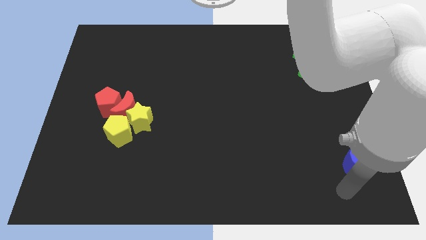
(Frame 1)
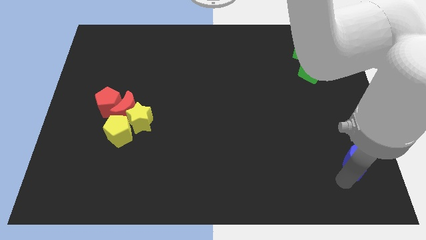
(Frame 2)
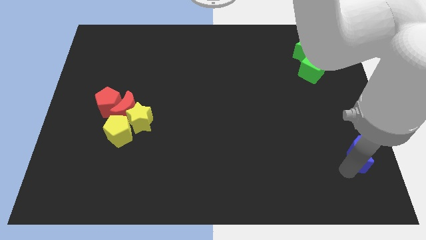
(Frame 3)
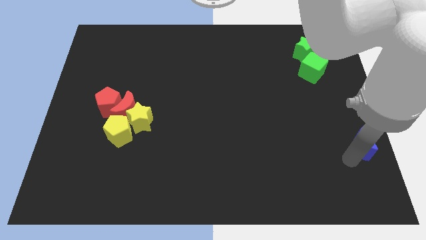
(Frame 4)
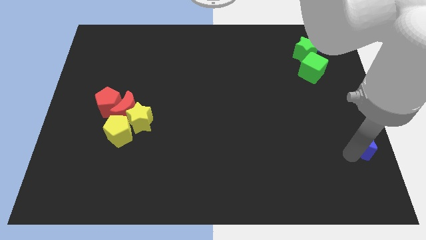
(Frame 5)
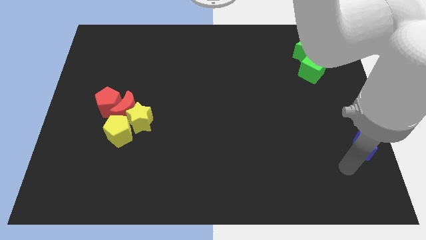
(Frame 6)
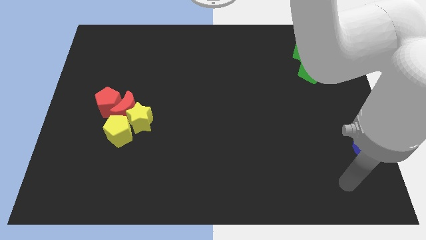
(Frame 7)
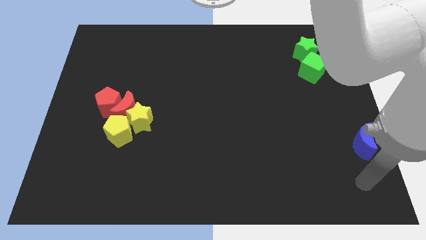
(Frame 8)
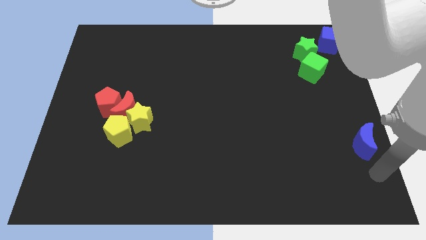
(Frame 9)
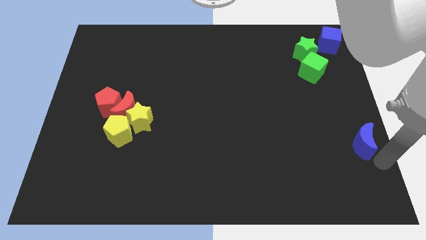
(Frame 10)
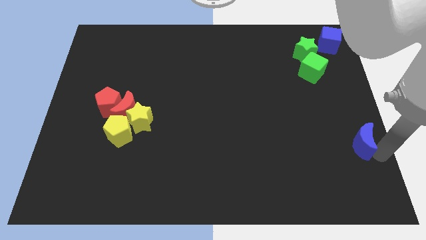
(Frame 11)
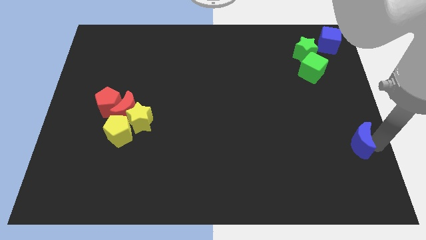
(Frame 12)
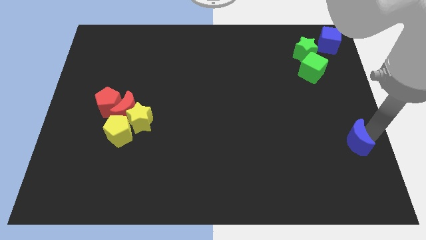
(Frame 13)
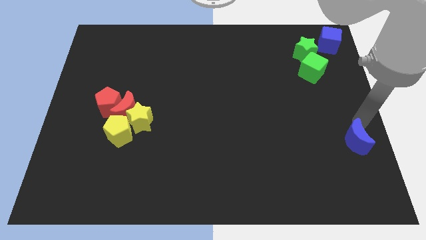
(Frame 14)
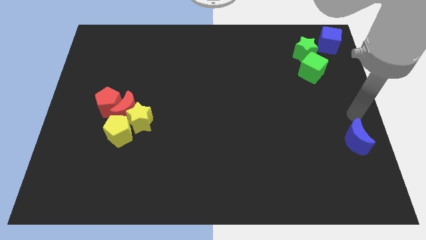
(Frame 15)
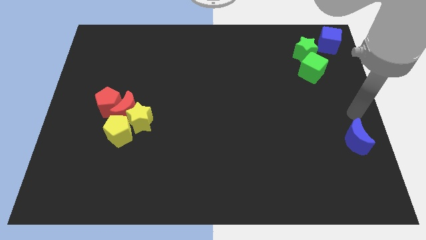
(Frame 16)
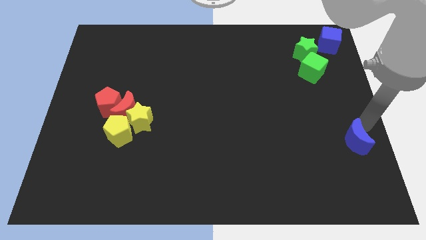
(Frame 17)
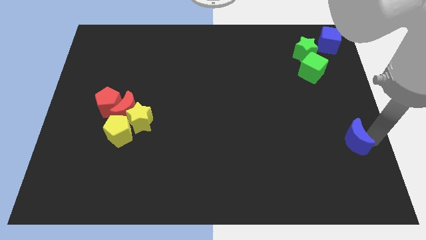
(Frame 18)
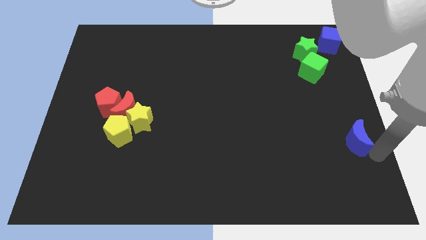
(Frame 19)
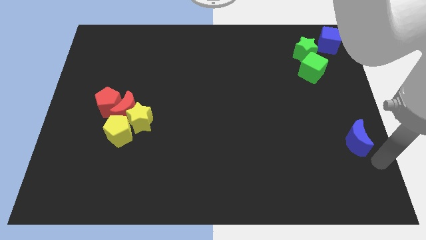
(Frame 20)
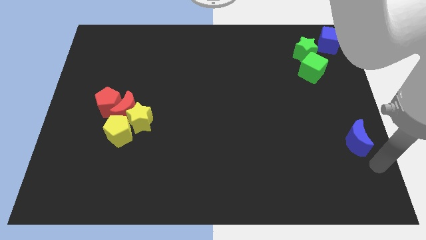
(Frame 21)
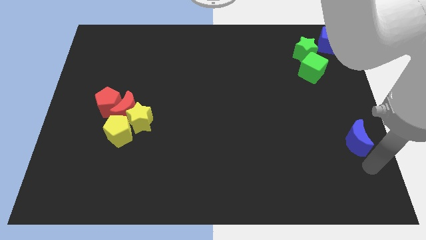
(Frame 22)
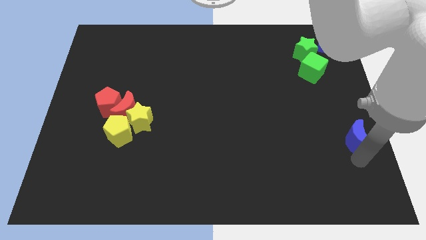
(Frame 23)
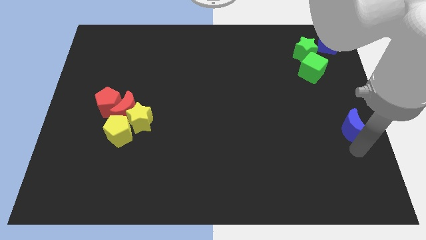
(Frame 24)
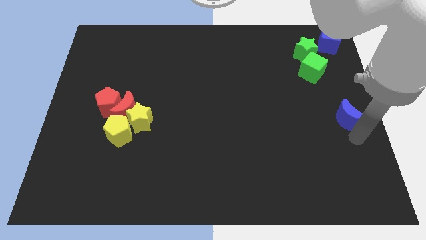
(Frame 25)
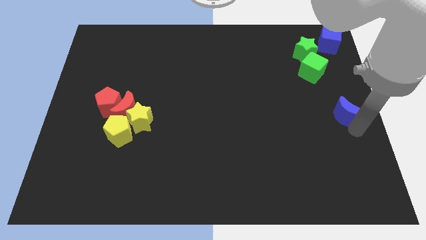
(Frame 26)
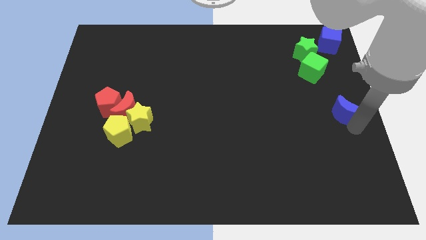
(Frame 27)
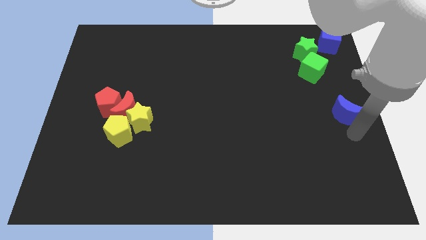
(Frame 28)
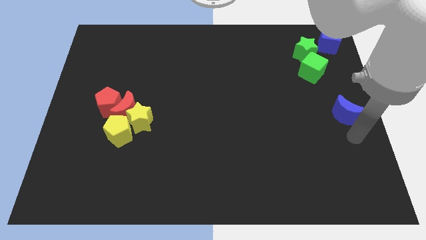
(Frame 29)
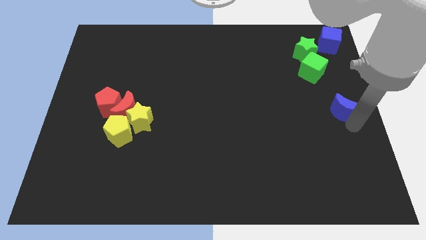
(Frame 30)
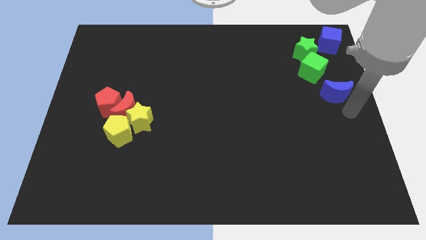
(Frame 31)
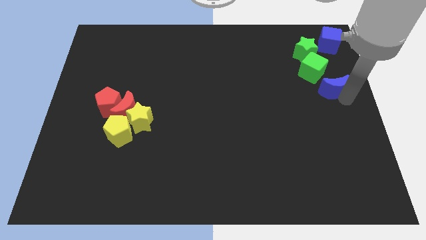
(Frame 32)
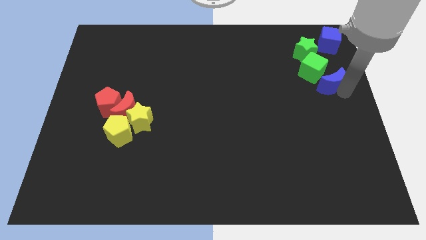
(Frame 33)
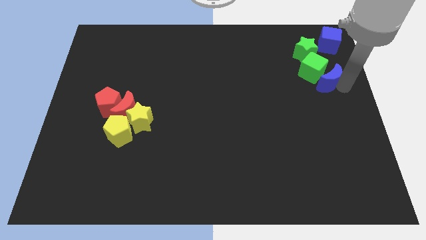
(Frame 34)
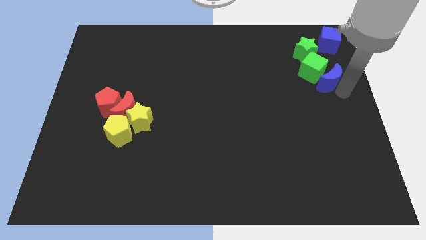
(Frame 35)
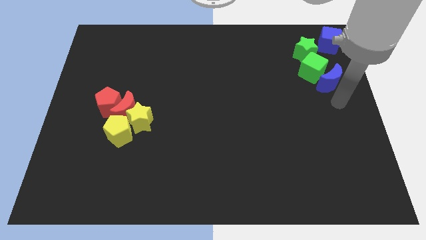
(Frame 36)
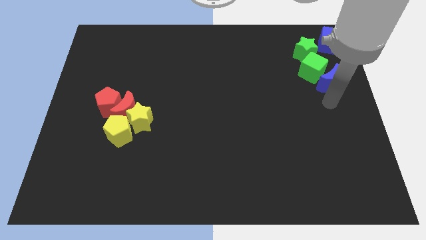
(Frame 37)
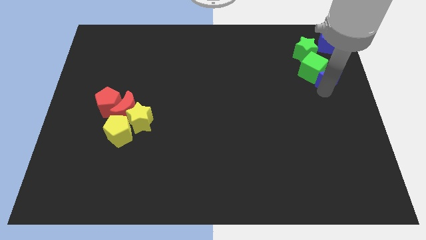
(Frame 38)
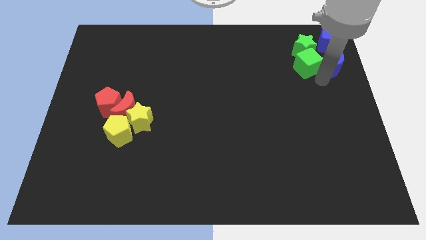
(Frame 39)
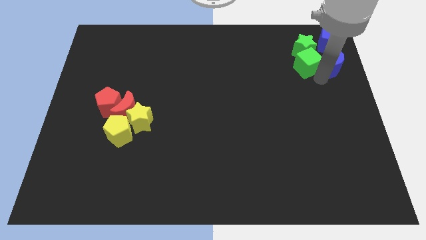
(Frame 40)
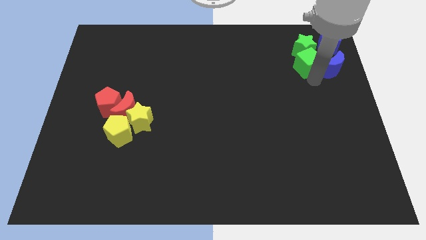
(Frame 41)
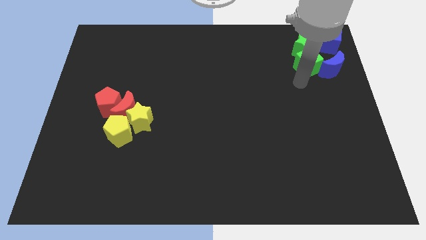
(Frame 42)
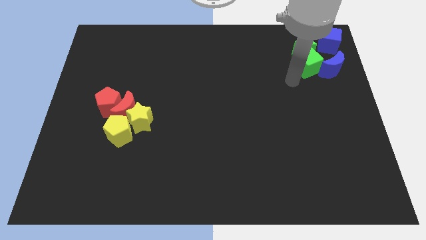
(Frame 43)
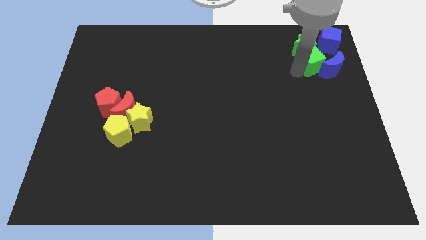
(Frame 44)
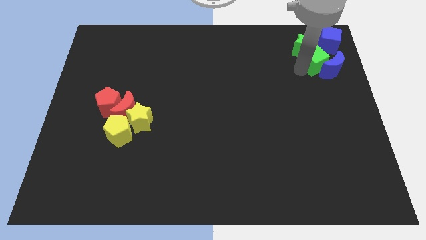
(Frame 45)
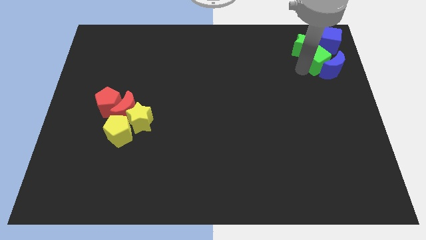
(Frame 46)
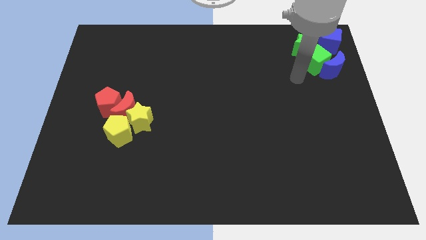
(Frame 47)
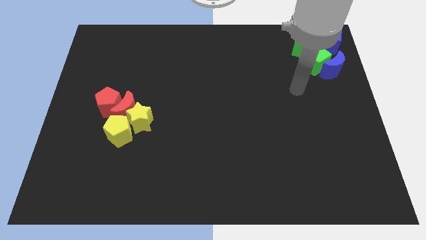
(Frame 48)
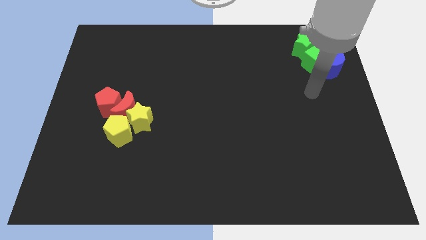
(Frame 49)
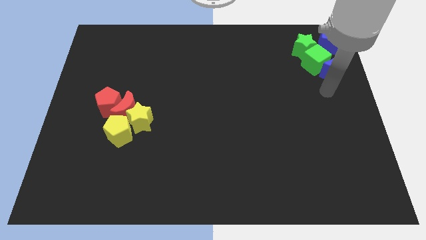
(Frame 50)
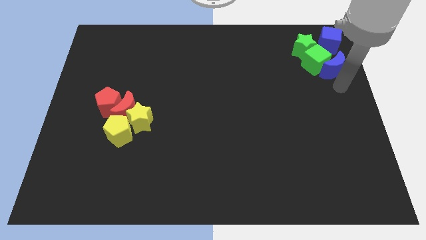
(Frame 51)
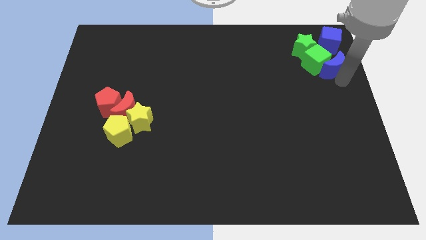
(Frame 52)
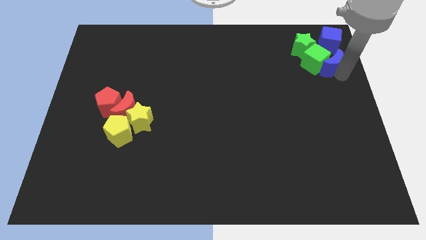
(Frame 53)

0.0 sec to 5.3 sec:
push the green cube into green star using the blue crescent

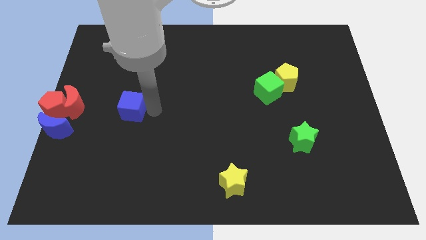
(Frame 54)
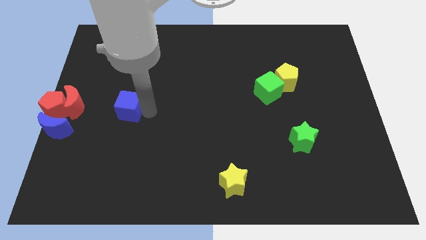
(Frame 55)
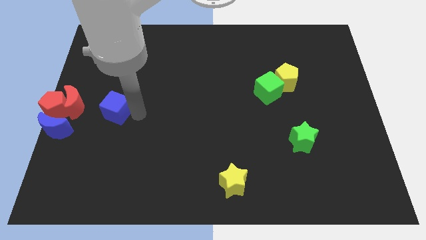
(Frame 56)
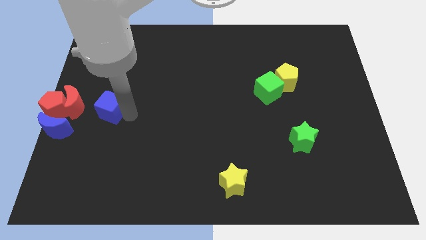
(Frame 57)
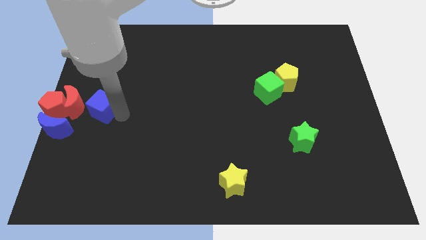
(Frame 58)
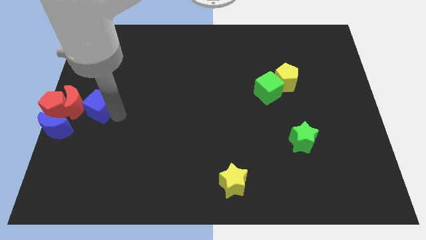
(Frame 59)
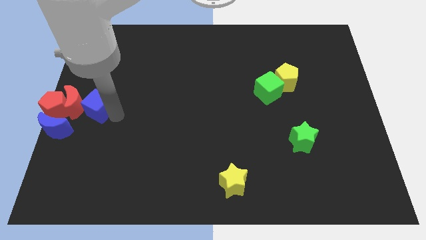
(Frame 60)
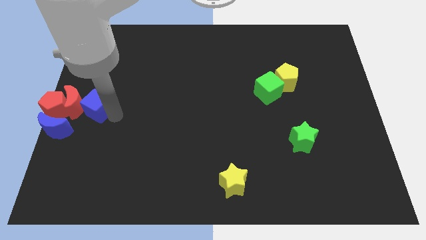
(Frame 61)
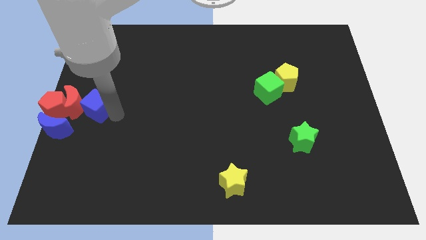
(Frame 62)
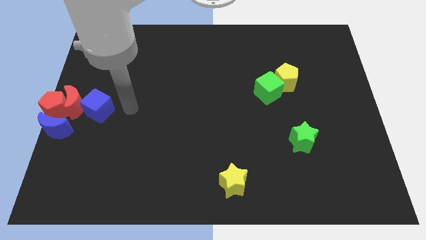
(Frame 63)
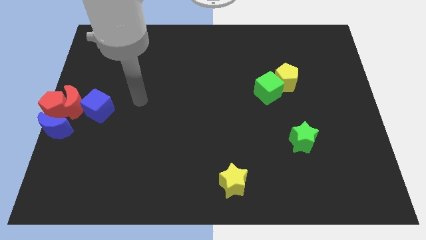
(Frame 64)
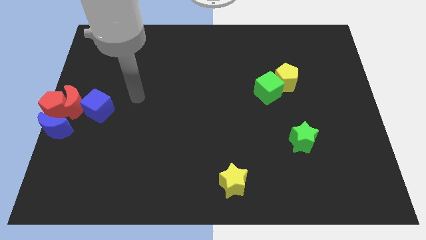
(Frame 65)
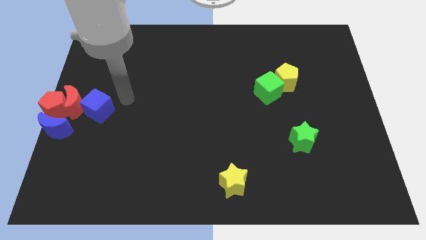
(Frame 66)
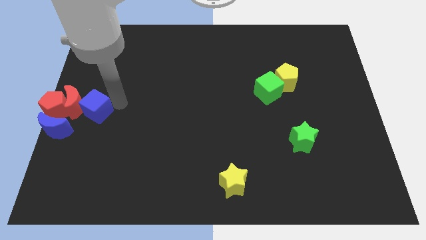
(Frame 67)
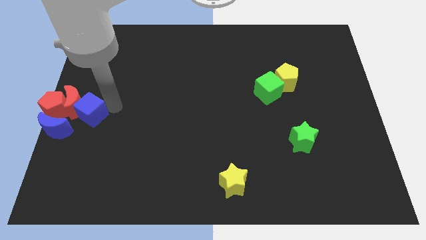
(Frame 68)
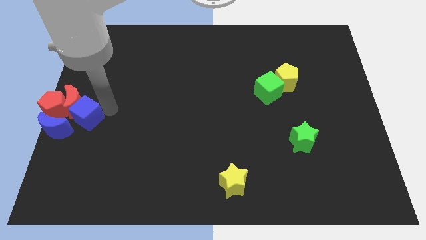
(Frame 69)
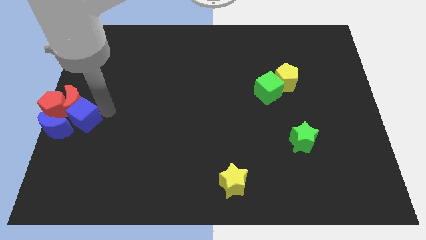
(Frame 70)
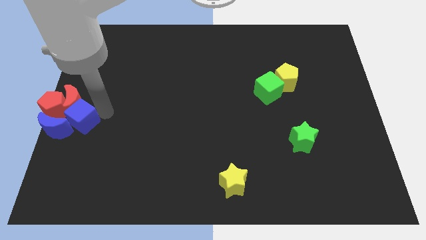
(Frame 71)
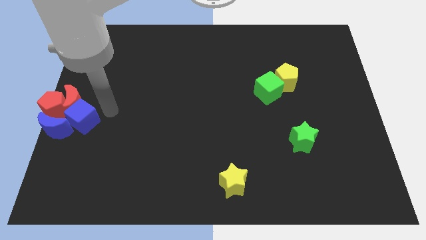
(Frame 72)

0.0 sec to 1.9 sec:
move blue cube into red crescent

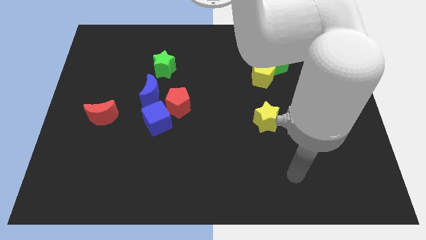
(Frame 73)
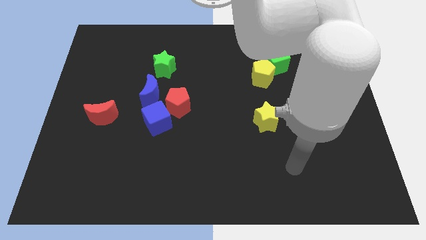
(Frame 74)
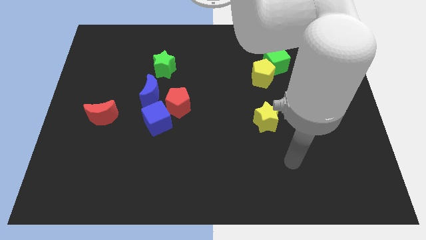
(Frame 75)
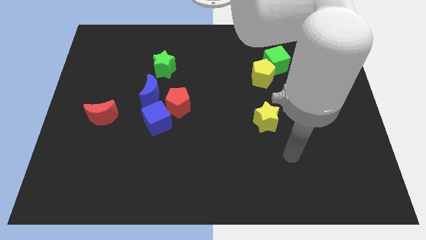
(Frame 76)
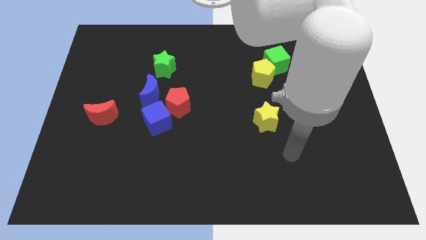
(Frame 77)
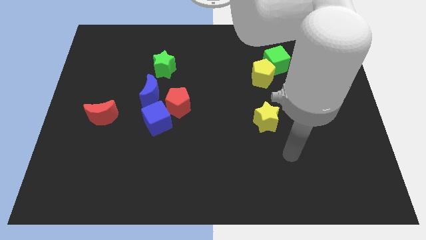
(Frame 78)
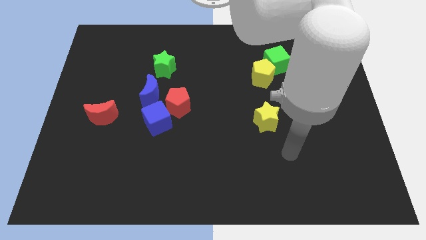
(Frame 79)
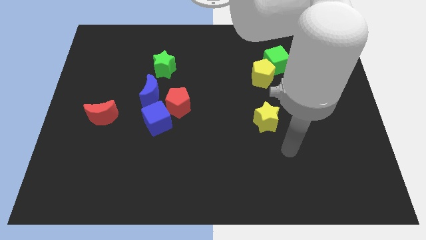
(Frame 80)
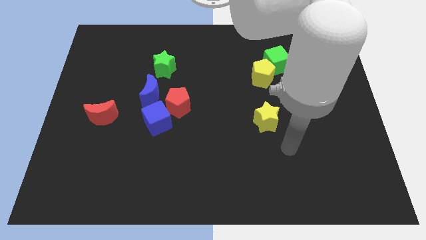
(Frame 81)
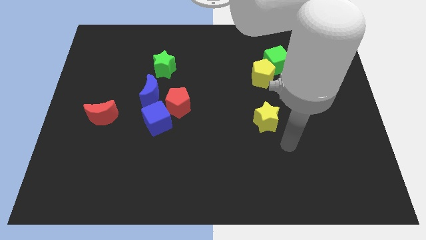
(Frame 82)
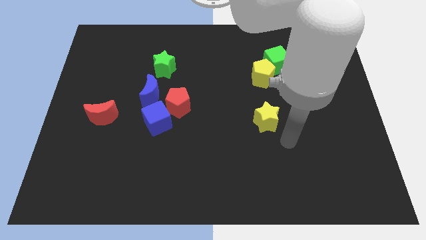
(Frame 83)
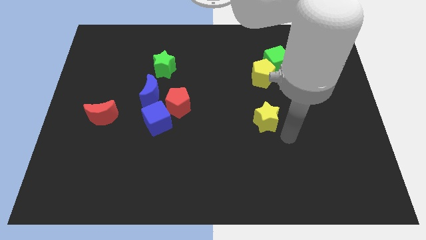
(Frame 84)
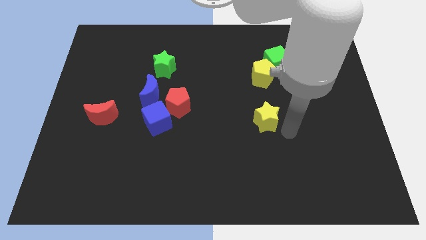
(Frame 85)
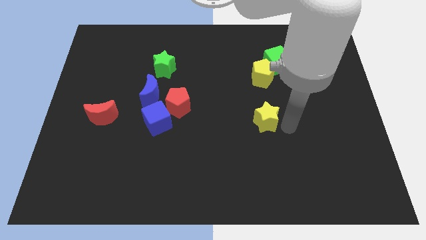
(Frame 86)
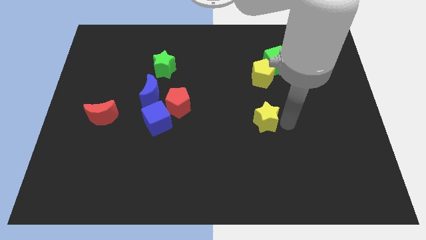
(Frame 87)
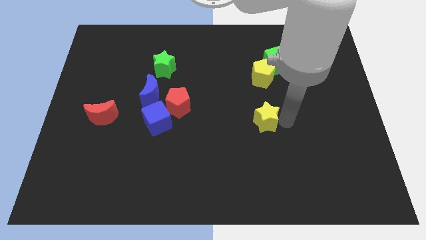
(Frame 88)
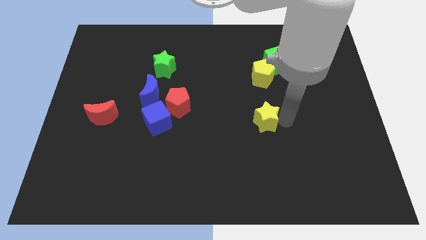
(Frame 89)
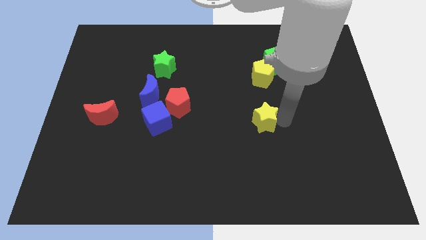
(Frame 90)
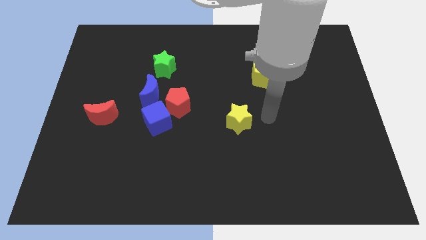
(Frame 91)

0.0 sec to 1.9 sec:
point the arm to the right side of the yellow star
